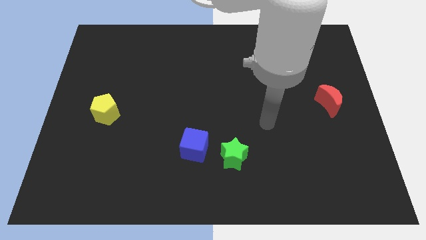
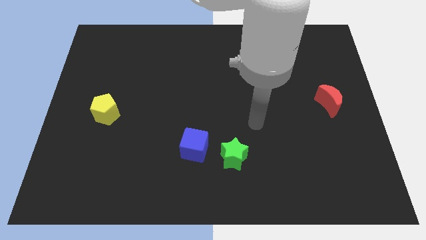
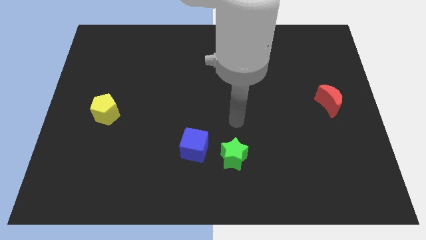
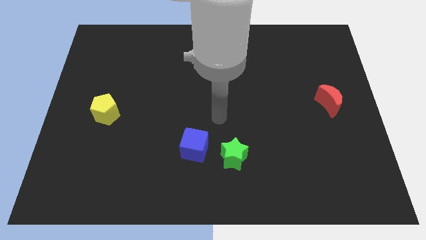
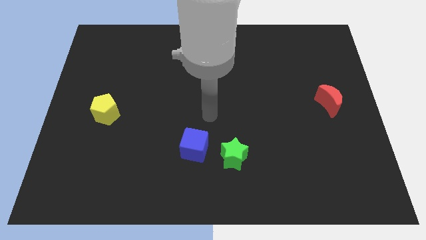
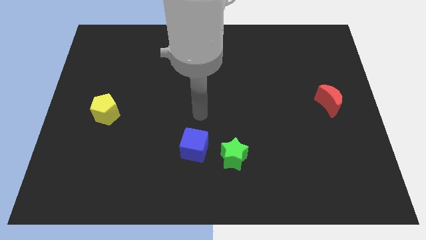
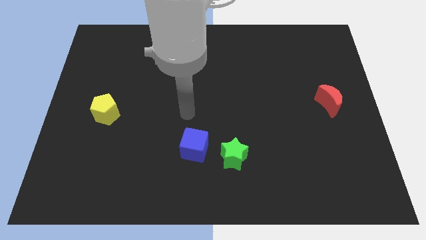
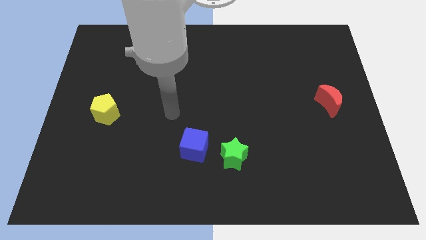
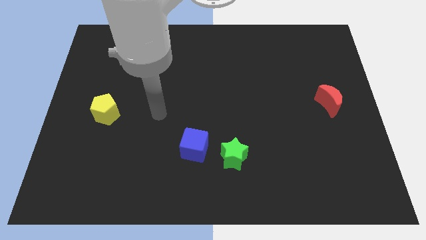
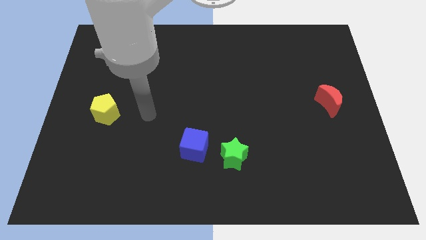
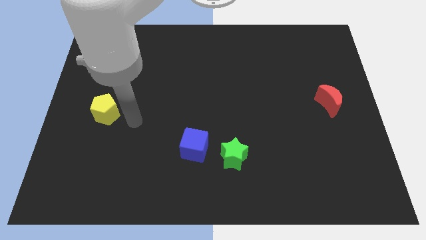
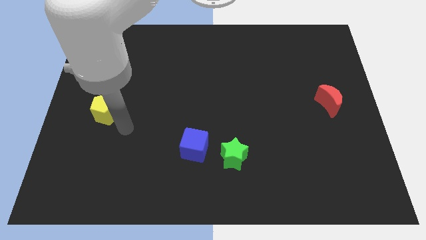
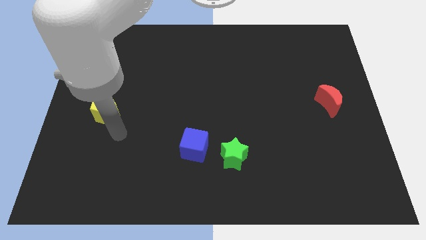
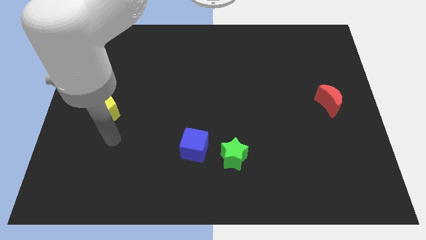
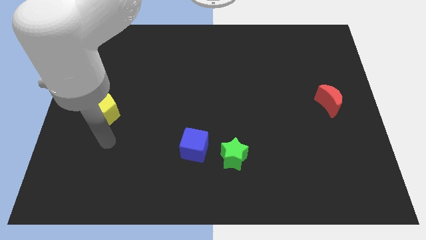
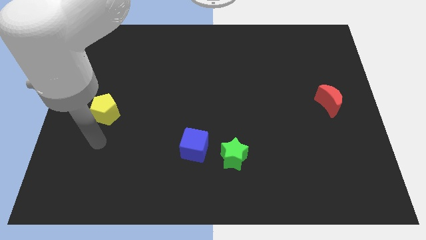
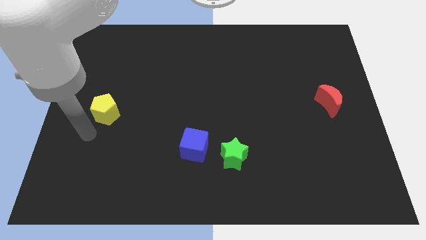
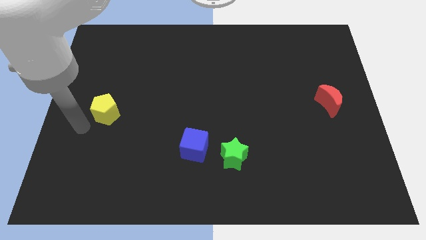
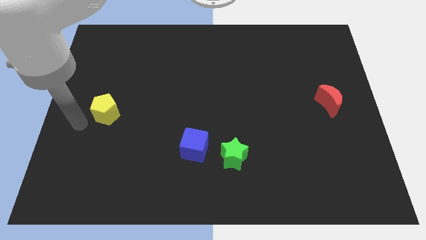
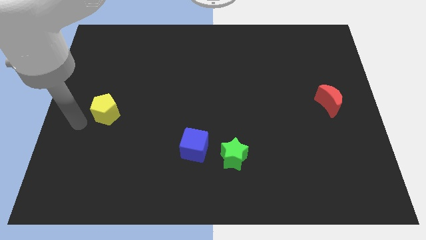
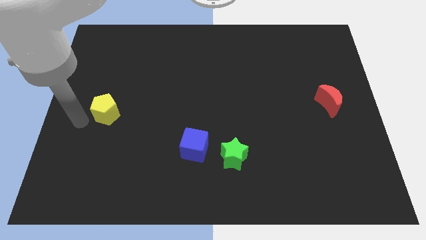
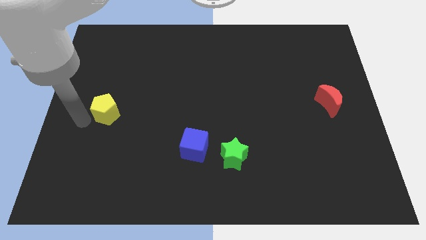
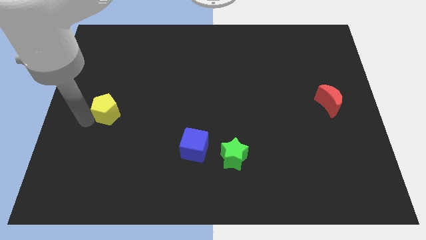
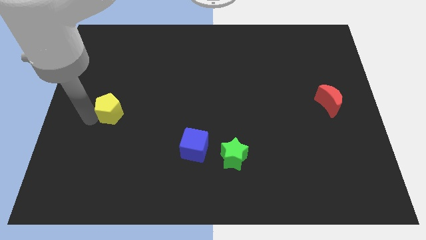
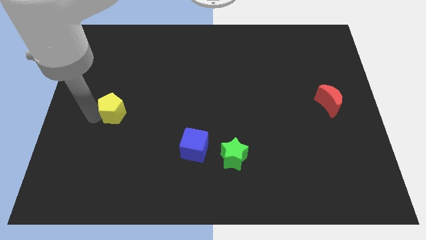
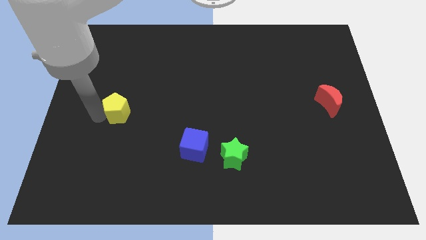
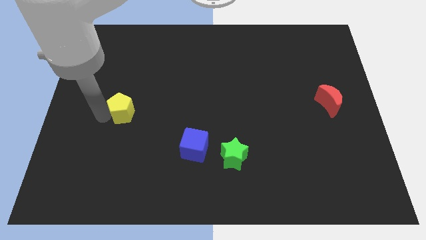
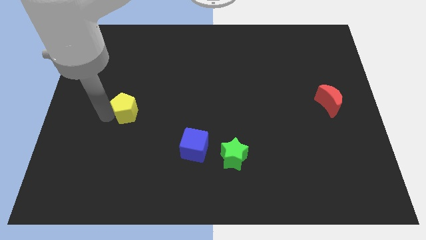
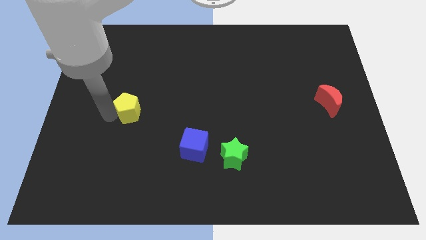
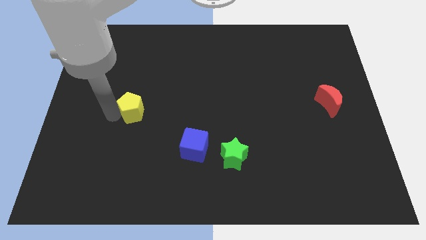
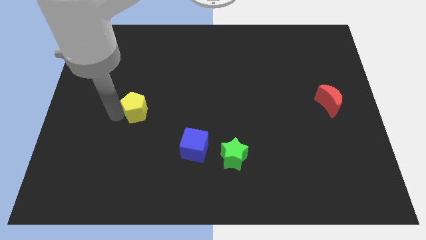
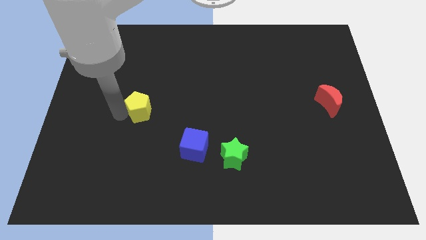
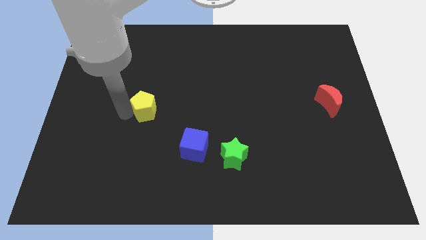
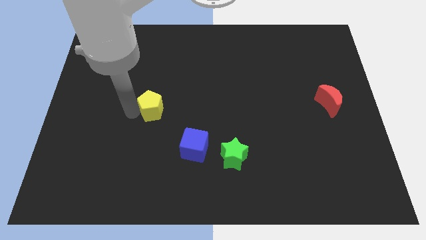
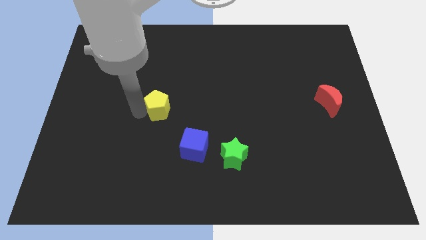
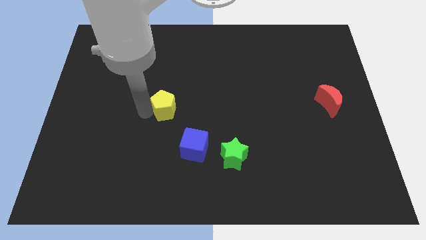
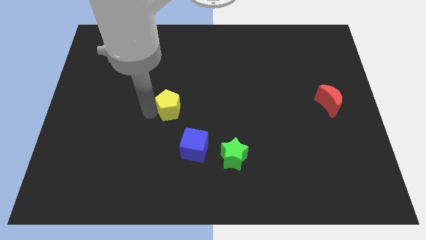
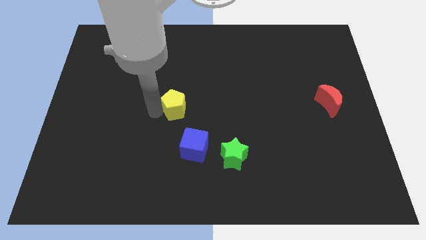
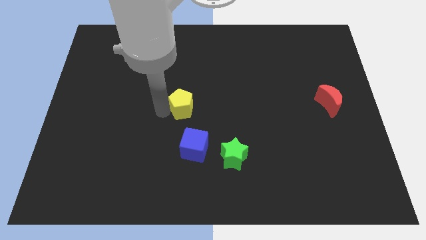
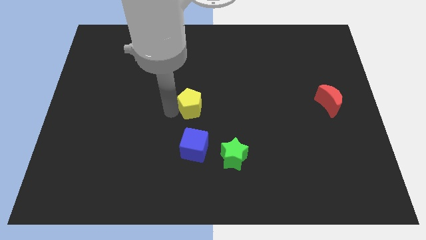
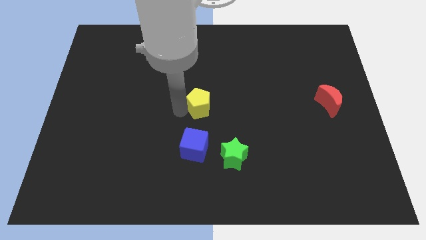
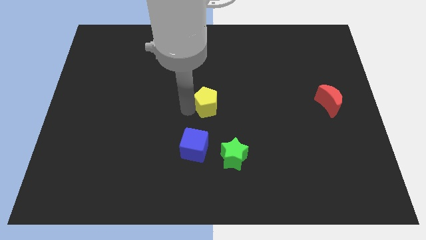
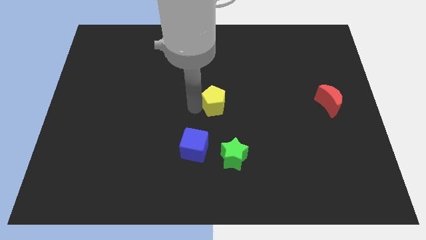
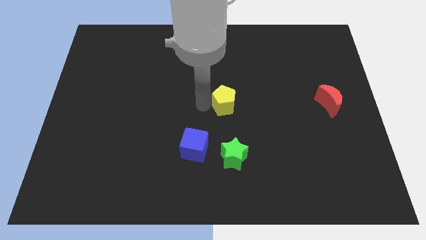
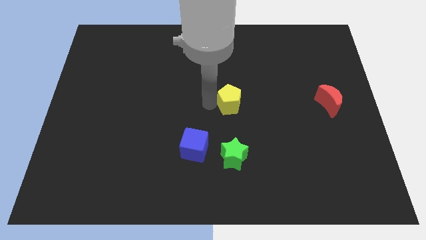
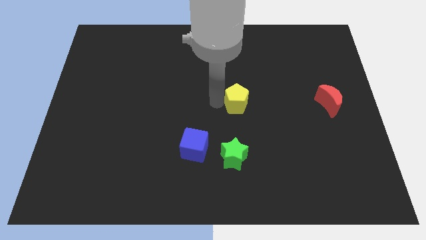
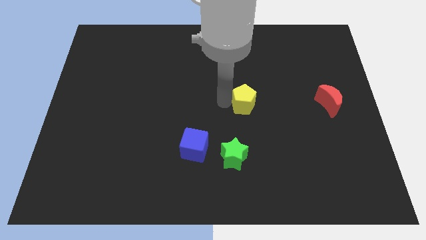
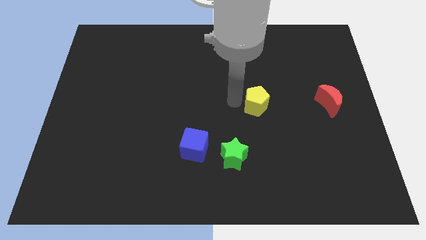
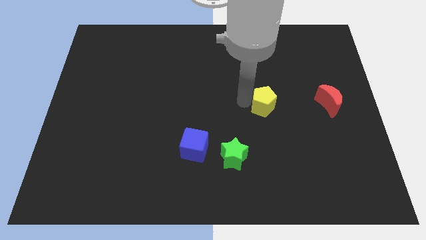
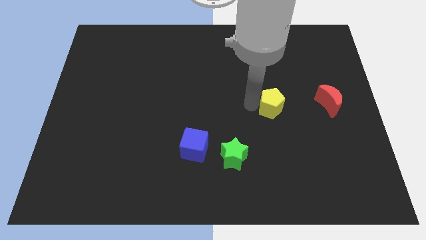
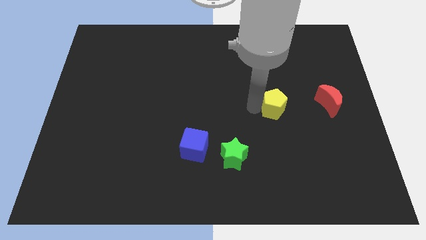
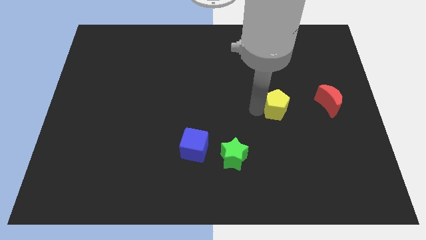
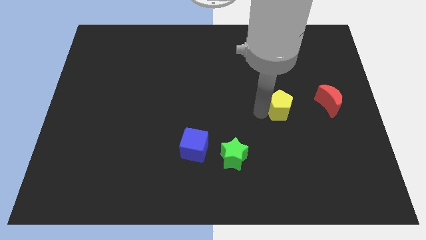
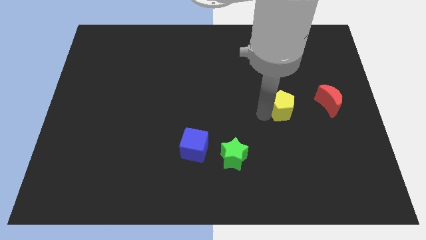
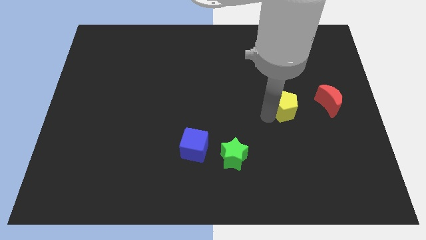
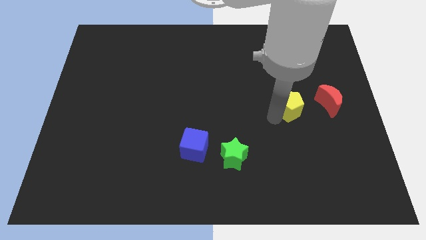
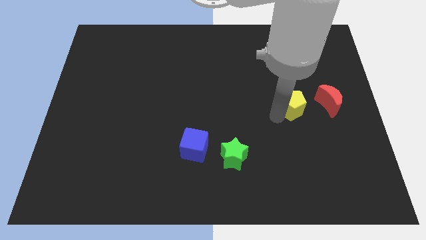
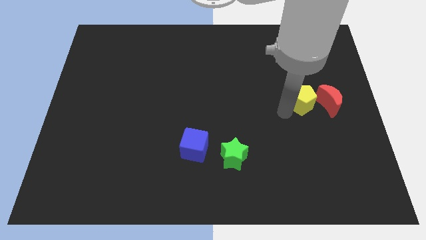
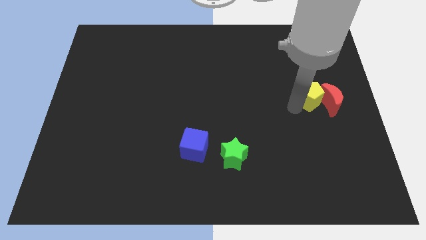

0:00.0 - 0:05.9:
move the yellow pentagon close to the red moon

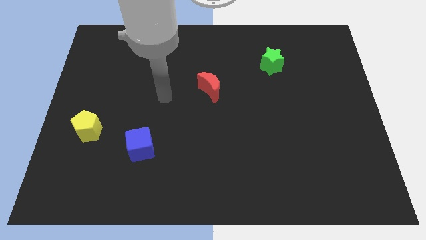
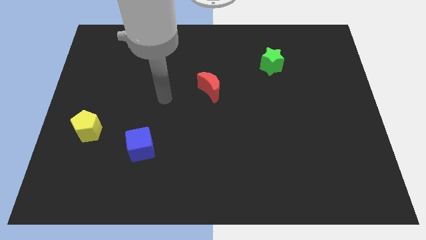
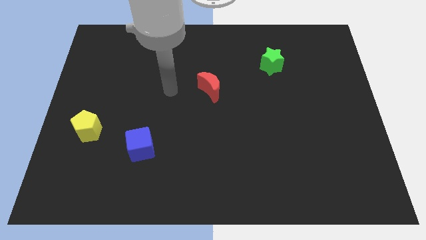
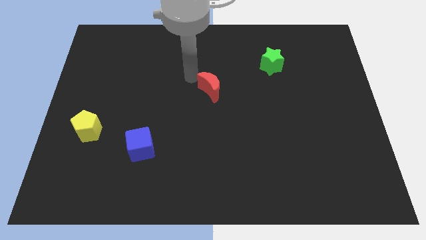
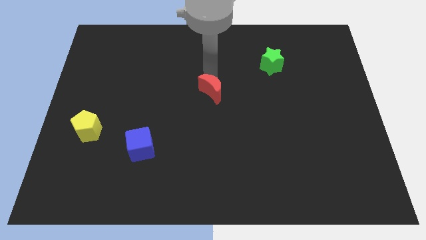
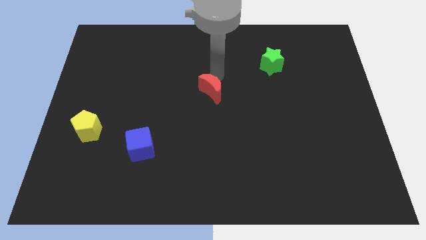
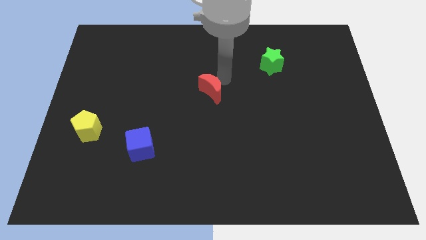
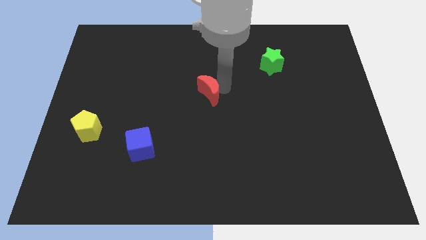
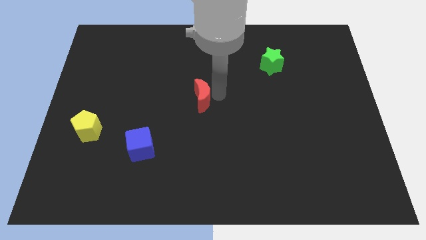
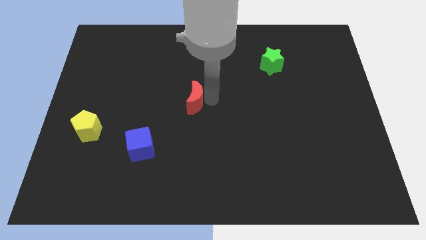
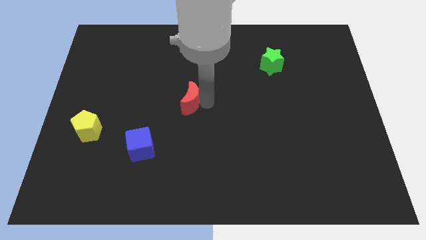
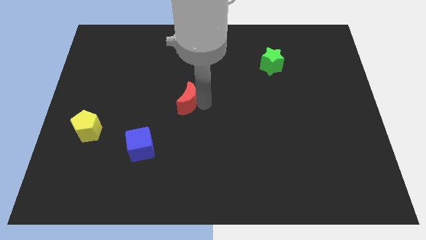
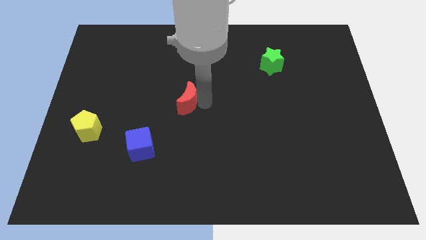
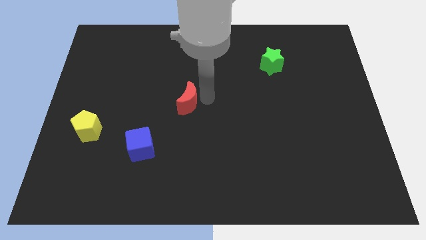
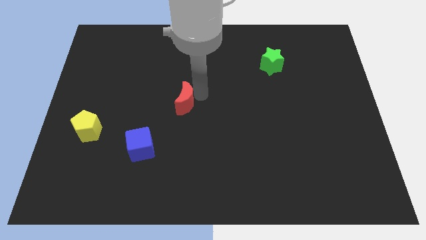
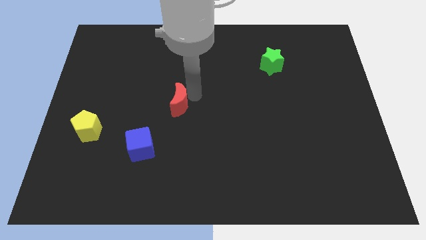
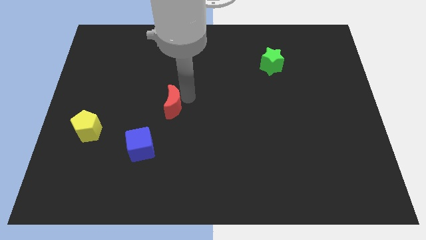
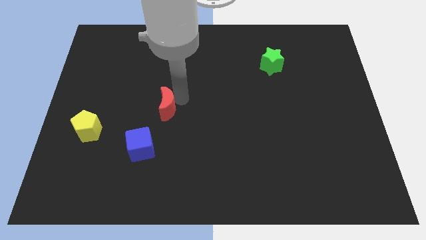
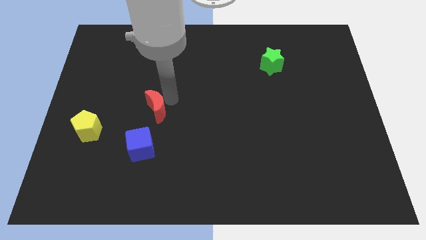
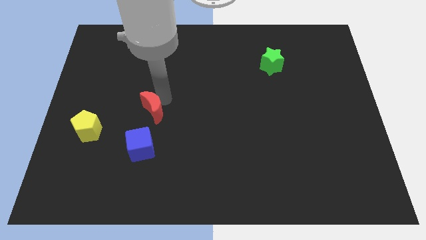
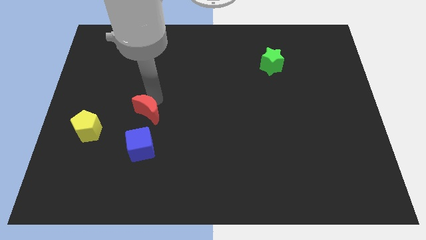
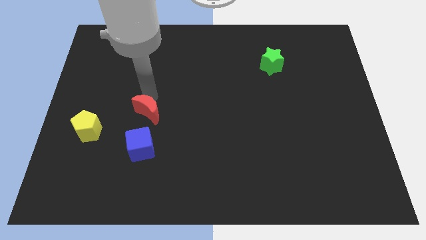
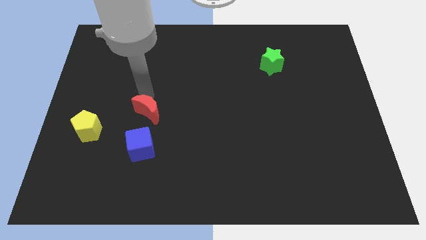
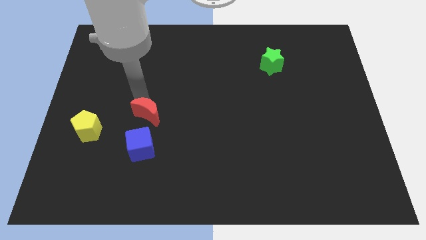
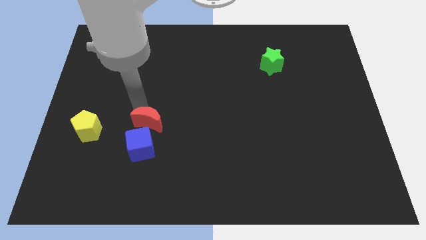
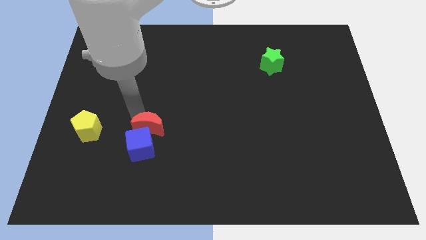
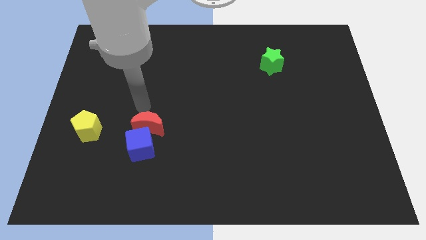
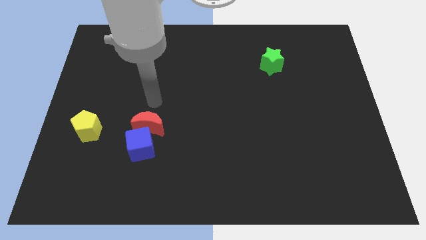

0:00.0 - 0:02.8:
move the moon next to the blue block
